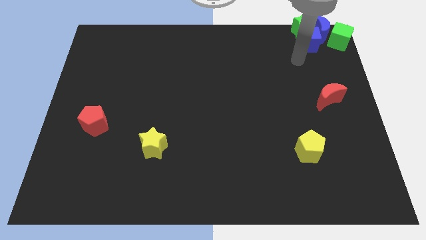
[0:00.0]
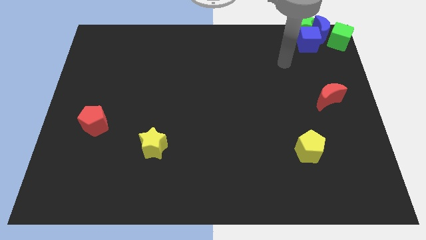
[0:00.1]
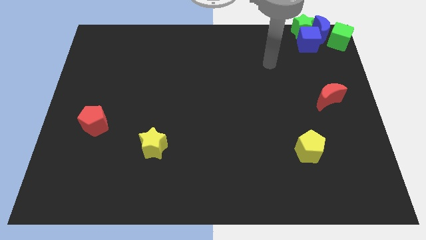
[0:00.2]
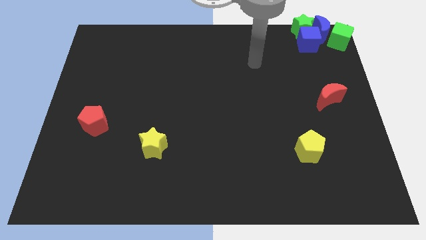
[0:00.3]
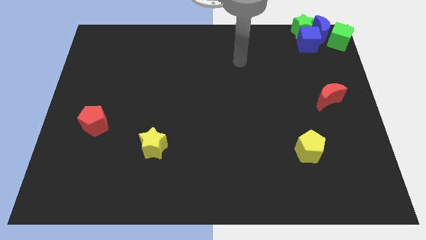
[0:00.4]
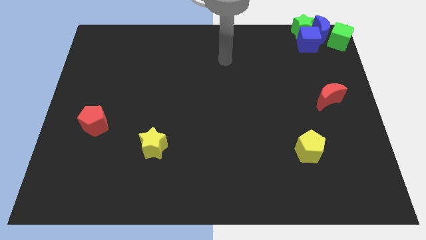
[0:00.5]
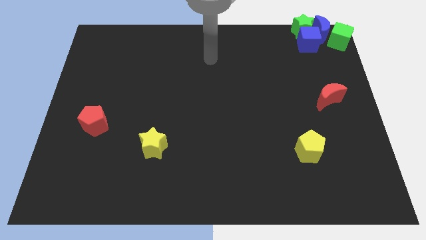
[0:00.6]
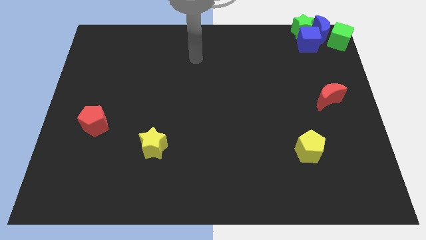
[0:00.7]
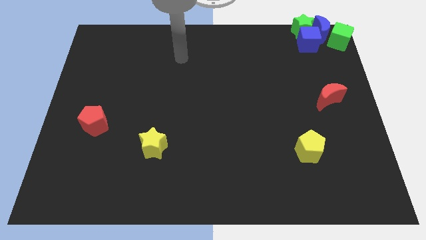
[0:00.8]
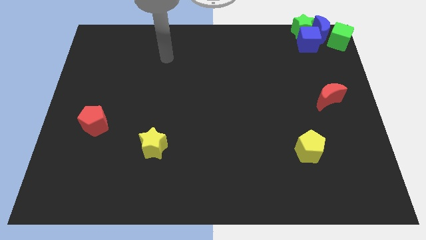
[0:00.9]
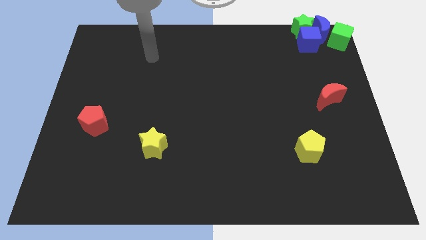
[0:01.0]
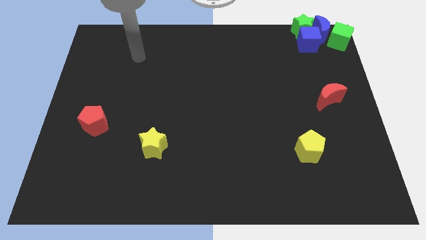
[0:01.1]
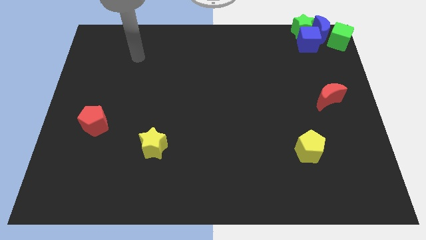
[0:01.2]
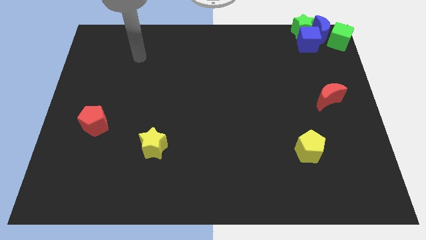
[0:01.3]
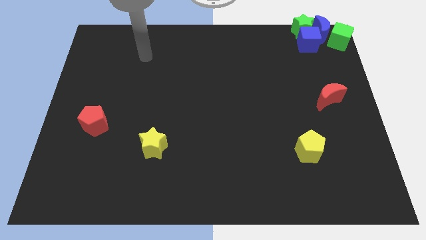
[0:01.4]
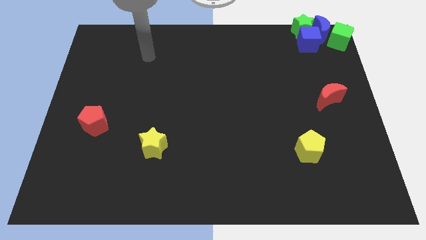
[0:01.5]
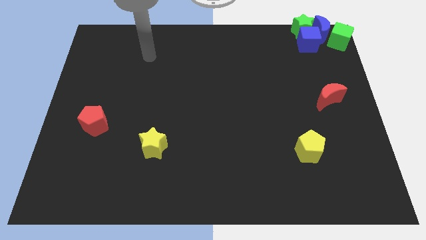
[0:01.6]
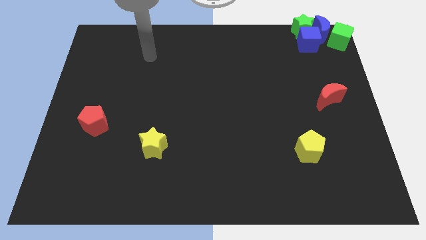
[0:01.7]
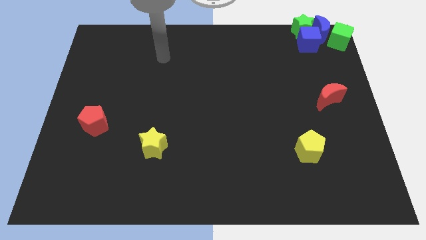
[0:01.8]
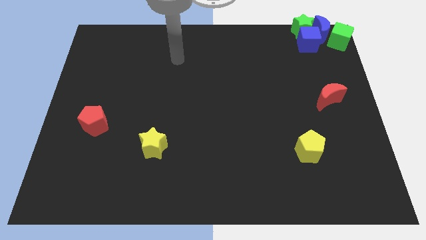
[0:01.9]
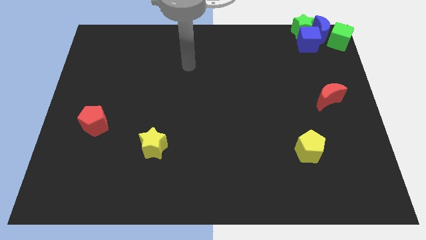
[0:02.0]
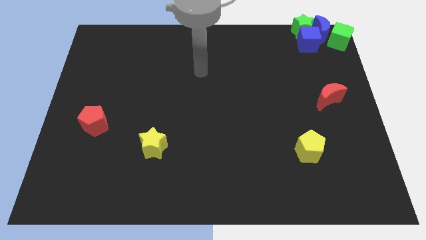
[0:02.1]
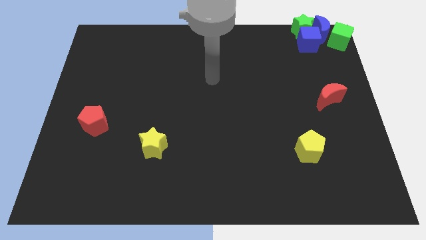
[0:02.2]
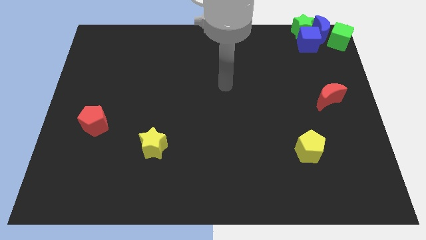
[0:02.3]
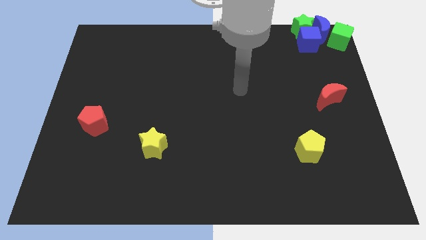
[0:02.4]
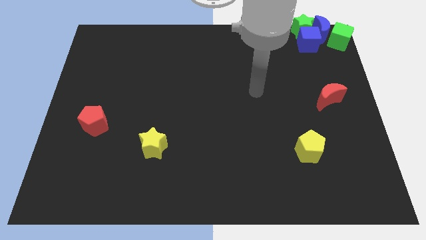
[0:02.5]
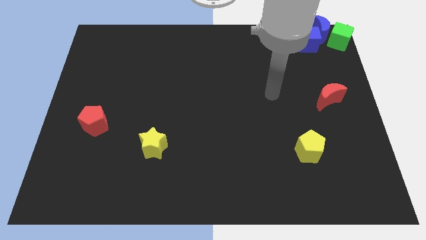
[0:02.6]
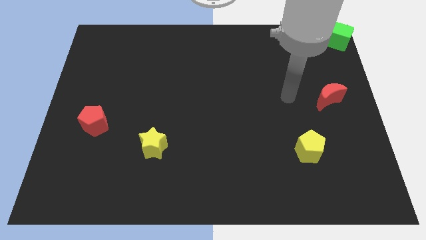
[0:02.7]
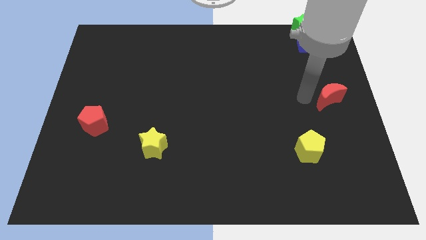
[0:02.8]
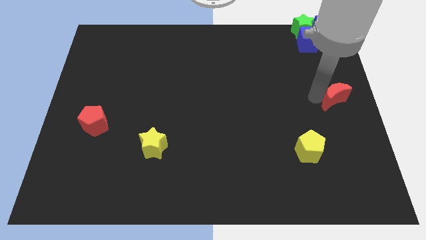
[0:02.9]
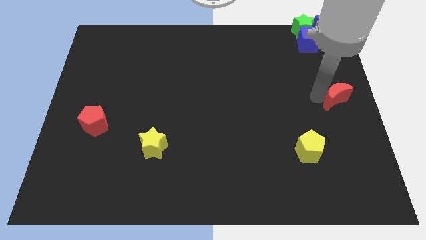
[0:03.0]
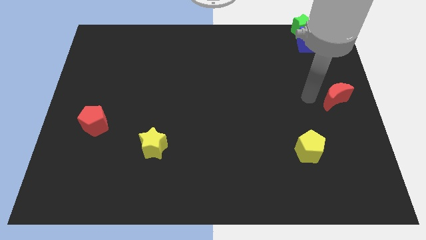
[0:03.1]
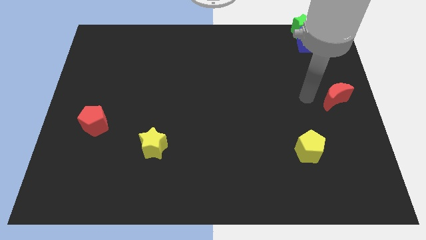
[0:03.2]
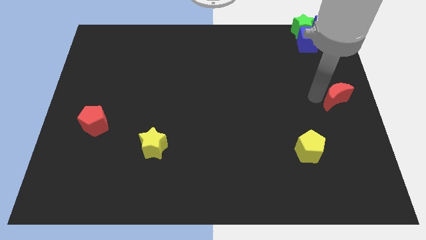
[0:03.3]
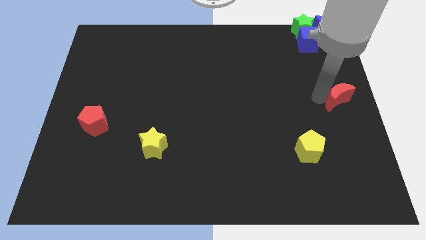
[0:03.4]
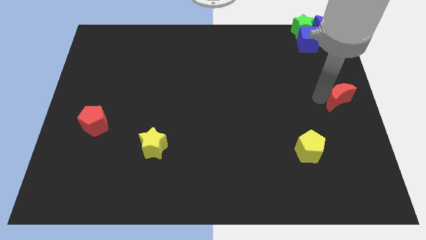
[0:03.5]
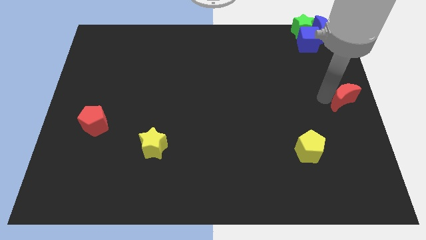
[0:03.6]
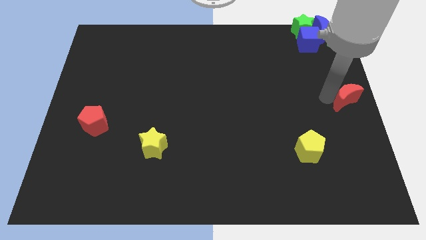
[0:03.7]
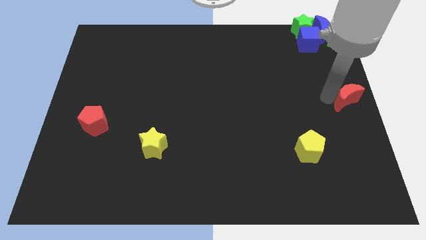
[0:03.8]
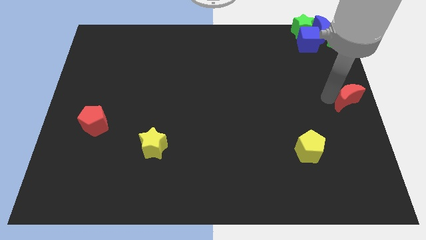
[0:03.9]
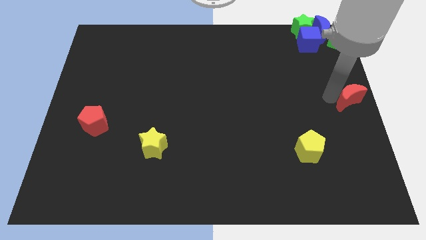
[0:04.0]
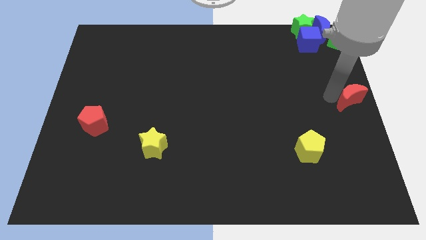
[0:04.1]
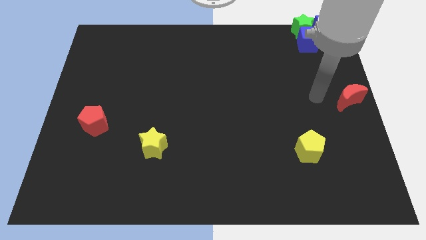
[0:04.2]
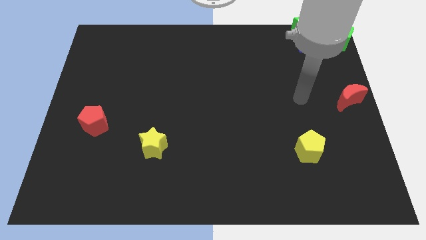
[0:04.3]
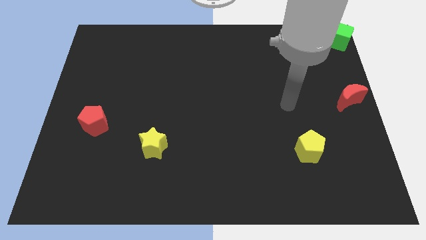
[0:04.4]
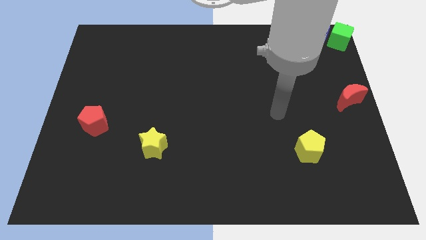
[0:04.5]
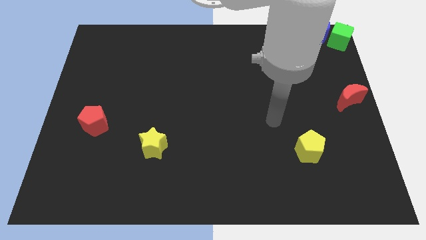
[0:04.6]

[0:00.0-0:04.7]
push red crescent to the right centre of the board

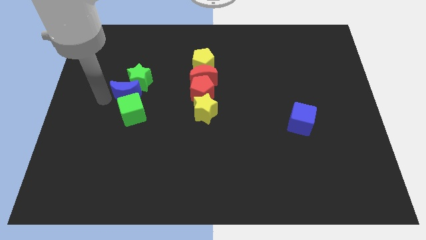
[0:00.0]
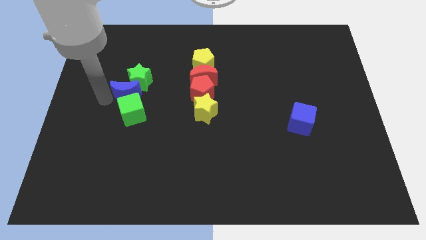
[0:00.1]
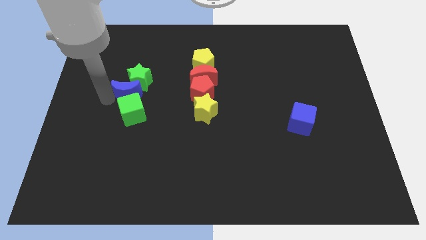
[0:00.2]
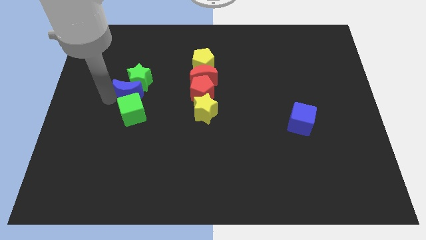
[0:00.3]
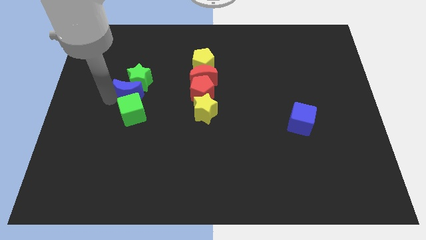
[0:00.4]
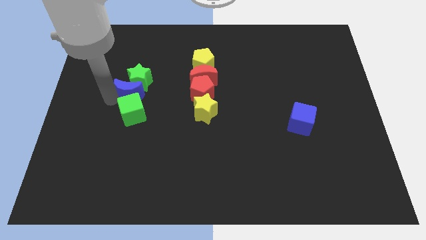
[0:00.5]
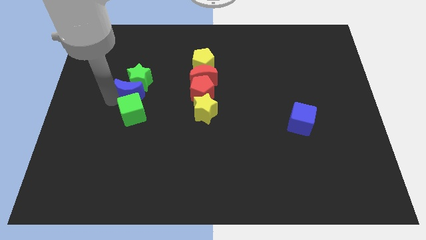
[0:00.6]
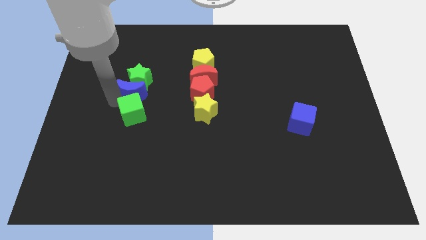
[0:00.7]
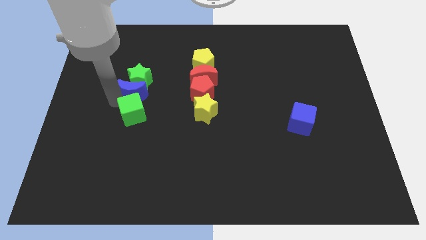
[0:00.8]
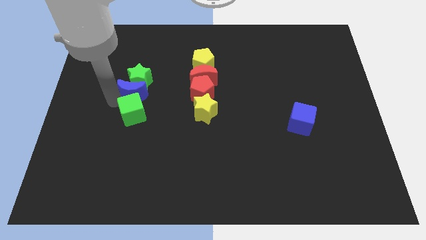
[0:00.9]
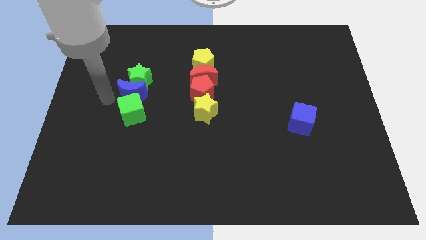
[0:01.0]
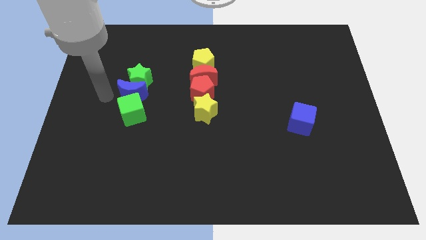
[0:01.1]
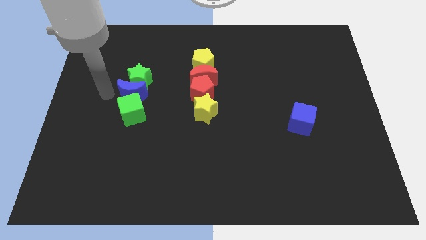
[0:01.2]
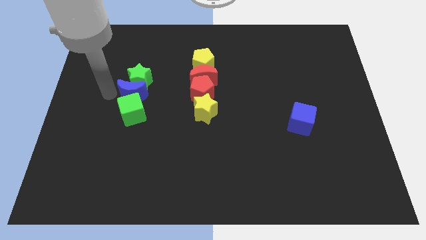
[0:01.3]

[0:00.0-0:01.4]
slightly push the blue crescent in between the green star and green cube

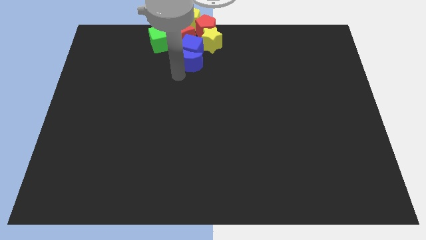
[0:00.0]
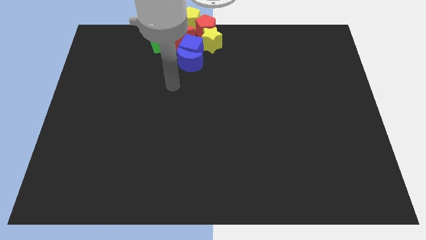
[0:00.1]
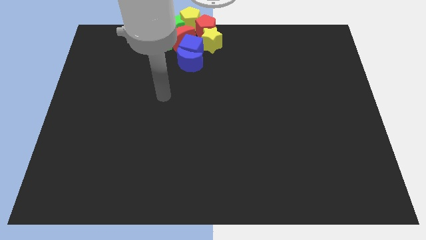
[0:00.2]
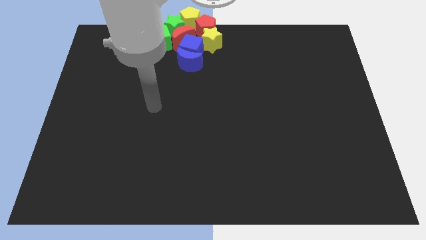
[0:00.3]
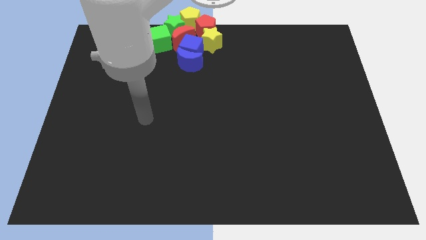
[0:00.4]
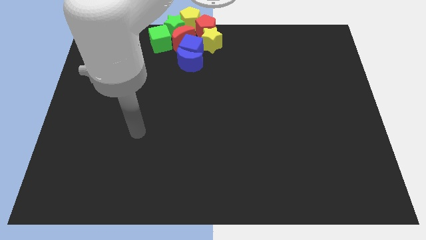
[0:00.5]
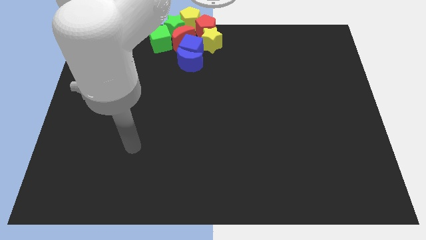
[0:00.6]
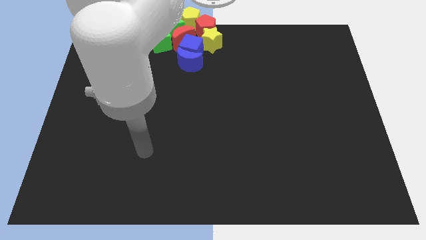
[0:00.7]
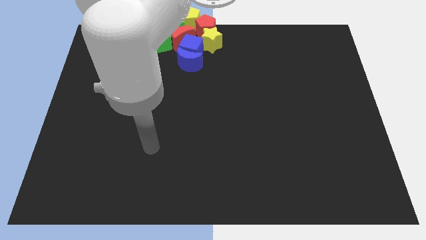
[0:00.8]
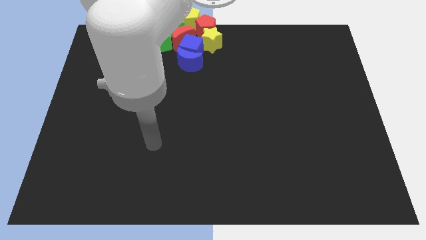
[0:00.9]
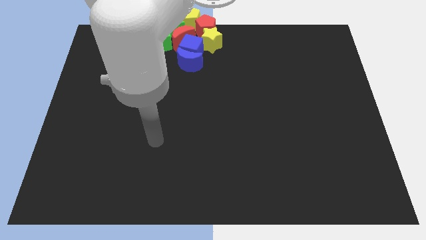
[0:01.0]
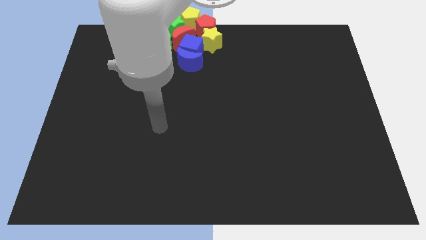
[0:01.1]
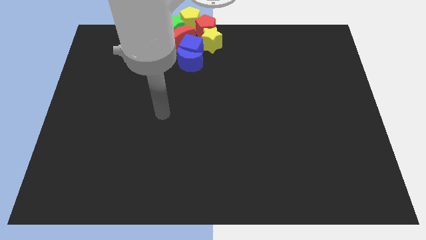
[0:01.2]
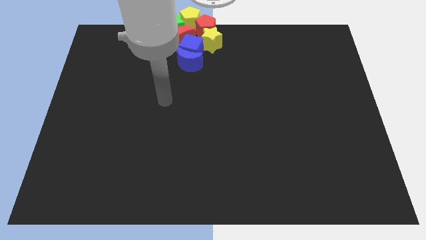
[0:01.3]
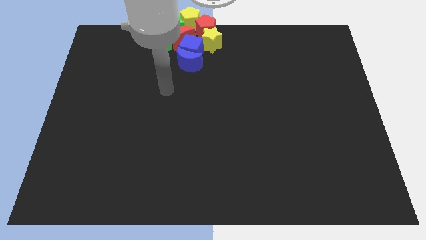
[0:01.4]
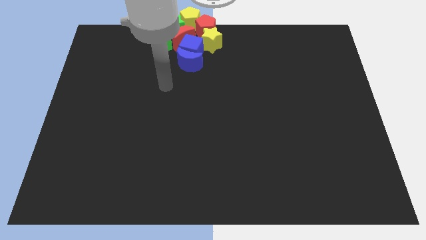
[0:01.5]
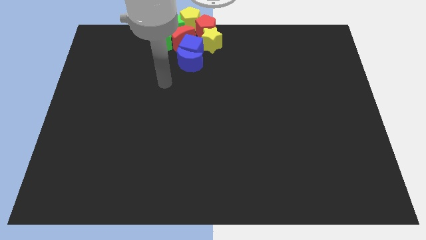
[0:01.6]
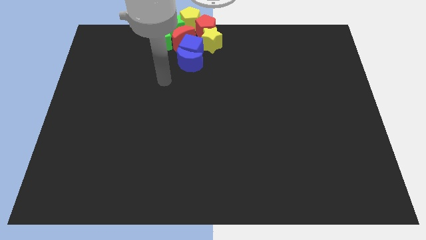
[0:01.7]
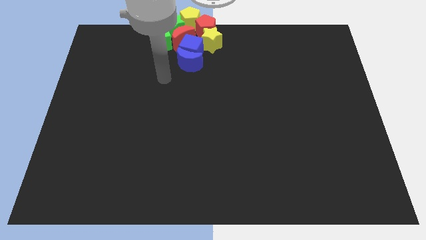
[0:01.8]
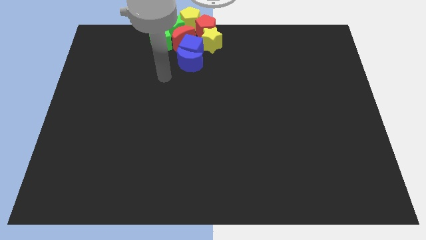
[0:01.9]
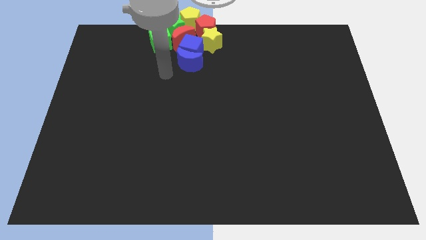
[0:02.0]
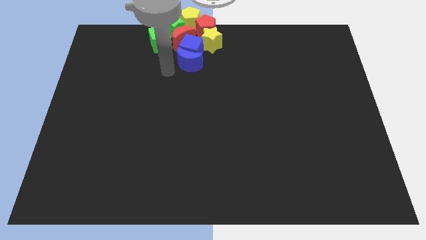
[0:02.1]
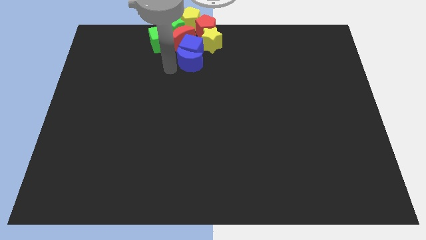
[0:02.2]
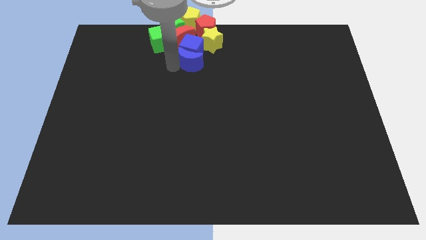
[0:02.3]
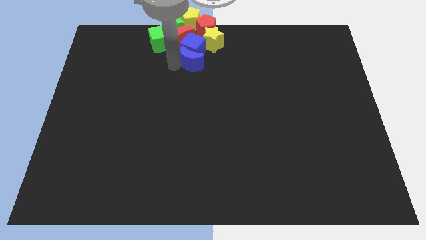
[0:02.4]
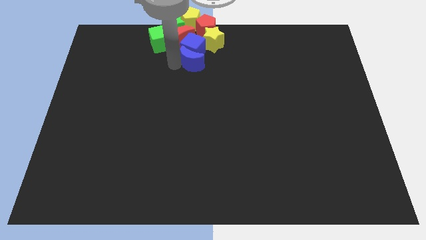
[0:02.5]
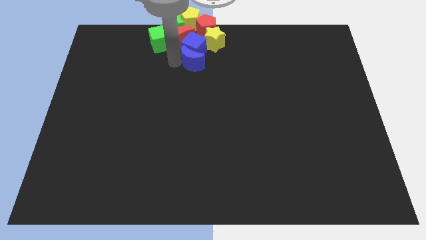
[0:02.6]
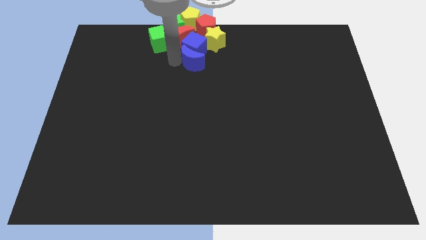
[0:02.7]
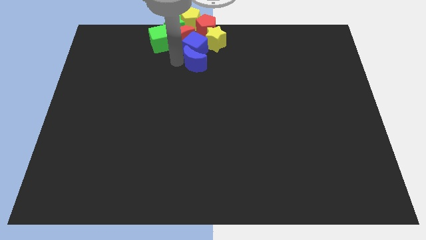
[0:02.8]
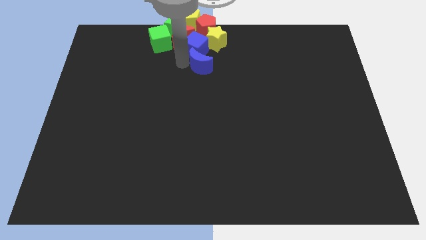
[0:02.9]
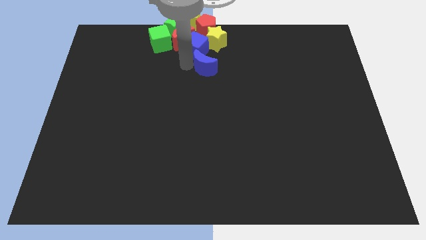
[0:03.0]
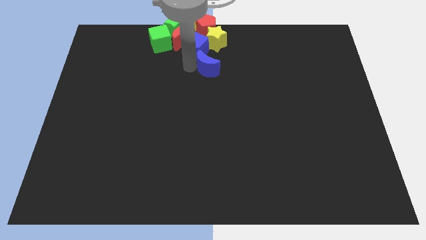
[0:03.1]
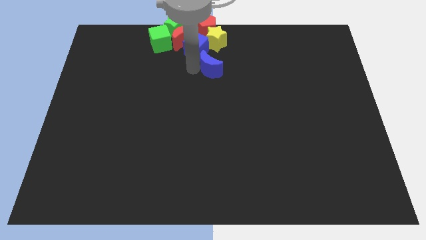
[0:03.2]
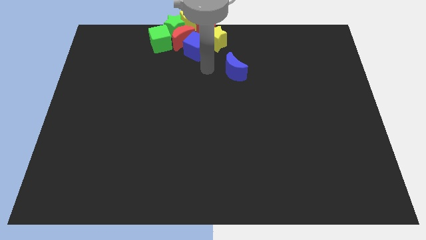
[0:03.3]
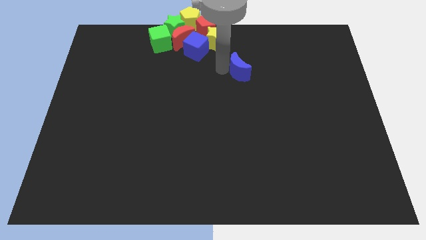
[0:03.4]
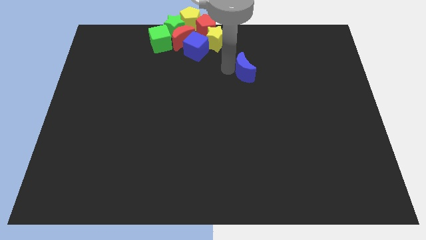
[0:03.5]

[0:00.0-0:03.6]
separate the blue moon and blue cube
